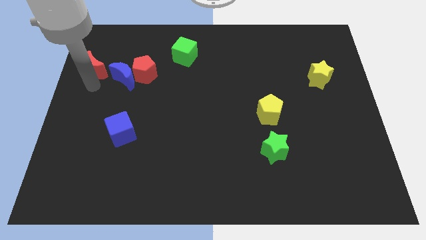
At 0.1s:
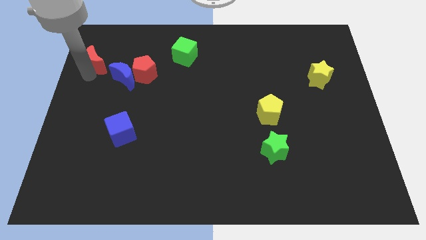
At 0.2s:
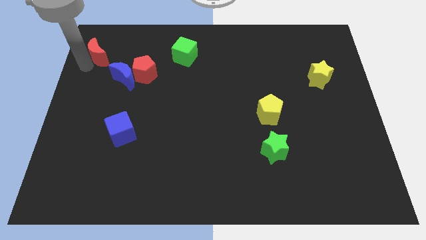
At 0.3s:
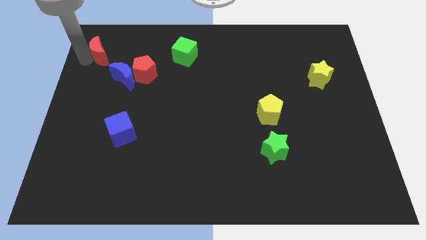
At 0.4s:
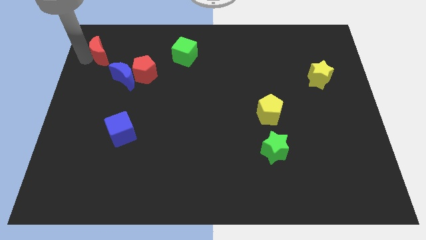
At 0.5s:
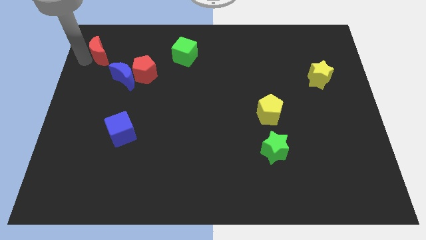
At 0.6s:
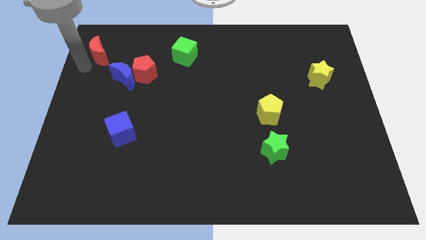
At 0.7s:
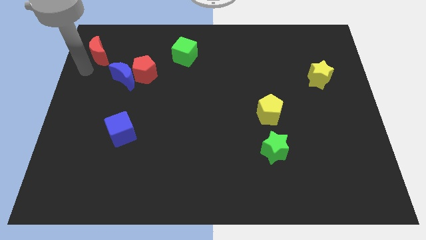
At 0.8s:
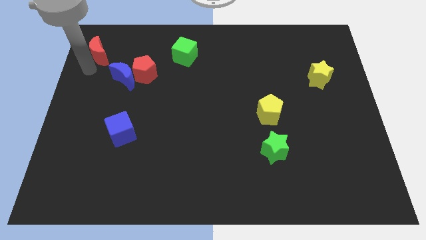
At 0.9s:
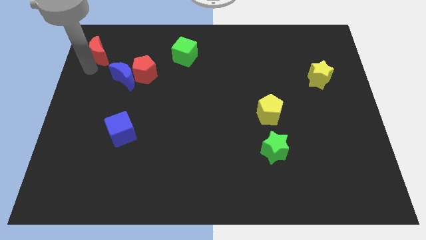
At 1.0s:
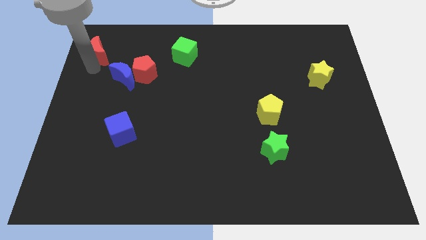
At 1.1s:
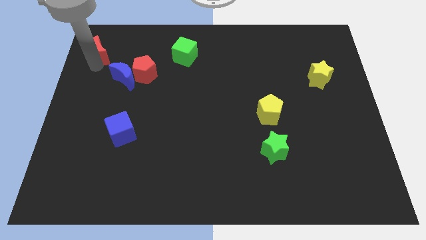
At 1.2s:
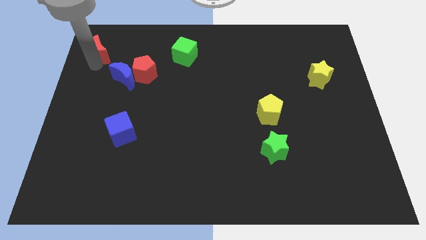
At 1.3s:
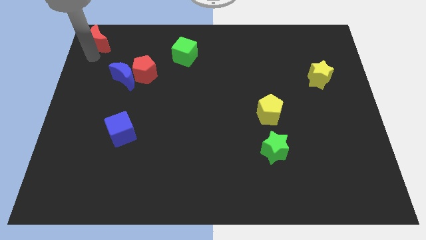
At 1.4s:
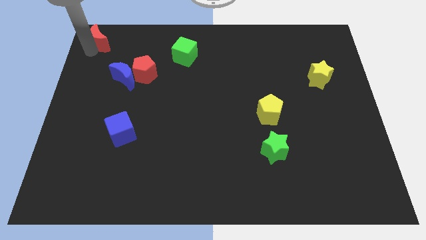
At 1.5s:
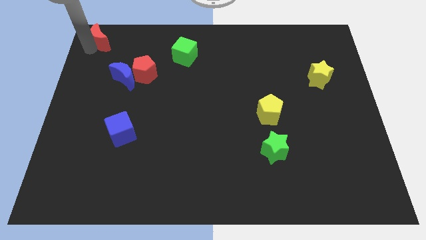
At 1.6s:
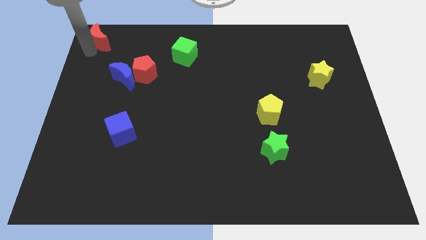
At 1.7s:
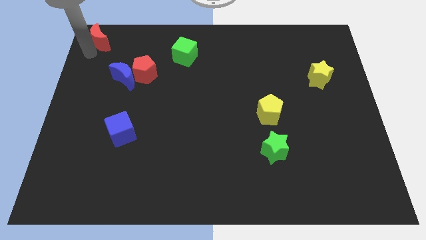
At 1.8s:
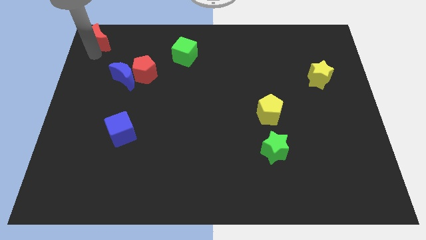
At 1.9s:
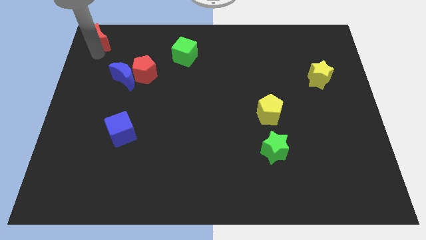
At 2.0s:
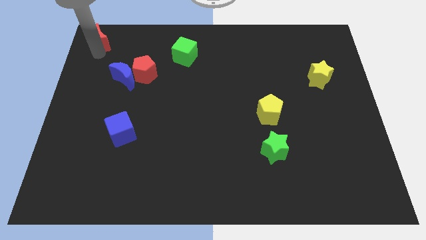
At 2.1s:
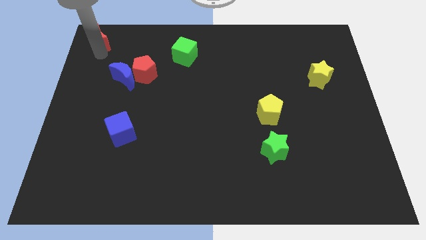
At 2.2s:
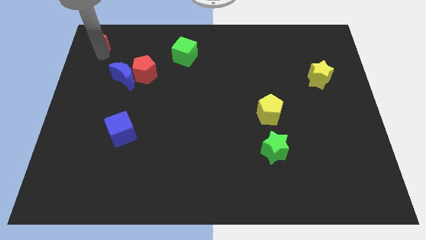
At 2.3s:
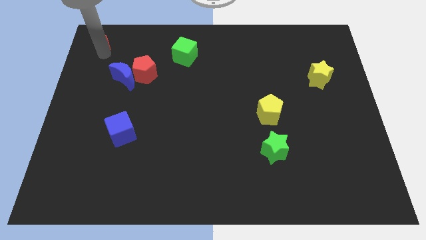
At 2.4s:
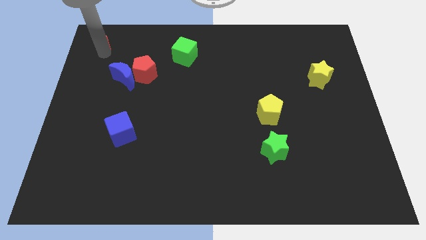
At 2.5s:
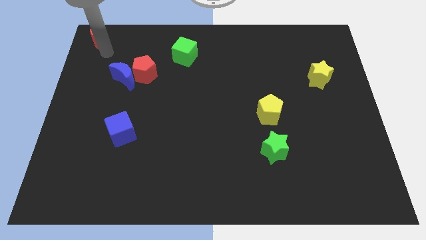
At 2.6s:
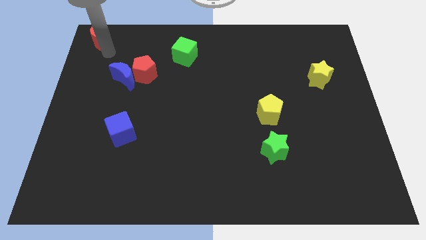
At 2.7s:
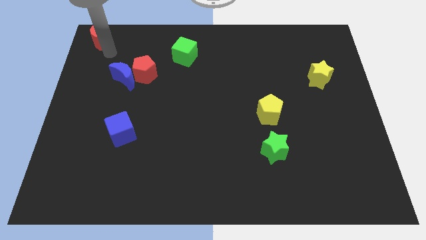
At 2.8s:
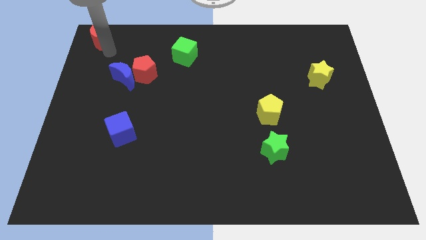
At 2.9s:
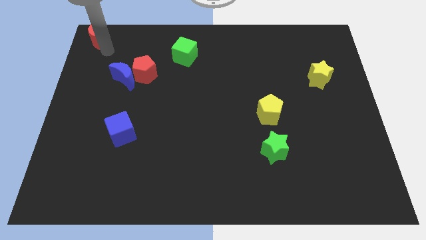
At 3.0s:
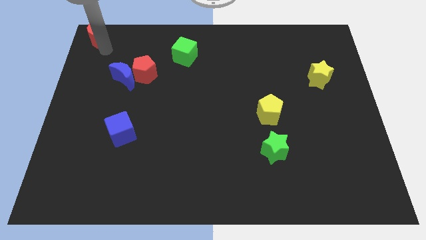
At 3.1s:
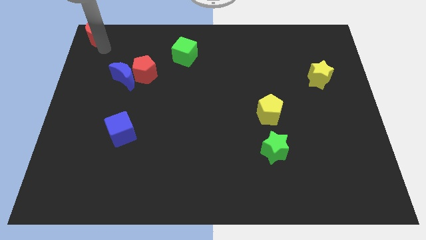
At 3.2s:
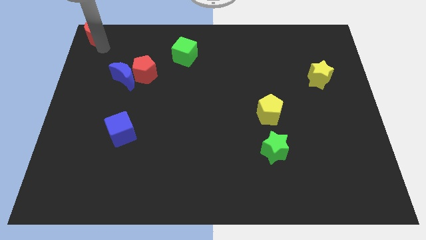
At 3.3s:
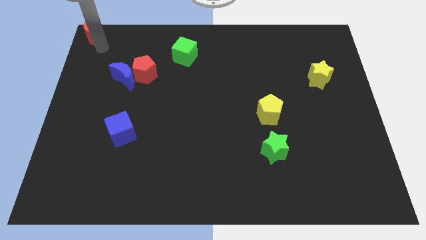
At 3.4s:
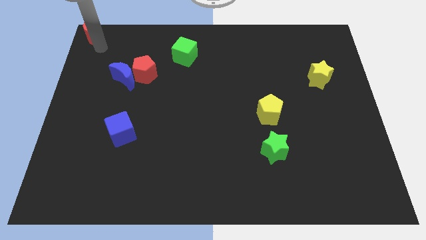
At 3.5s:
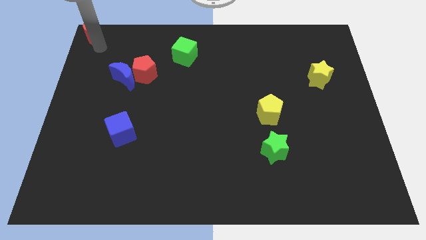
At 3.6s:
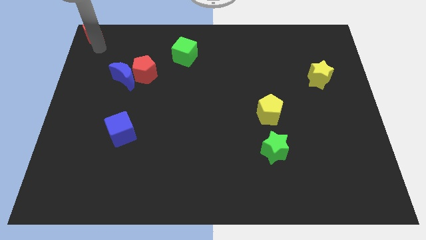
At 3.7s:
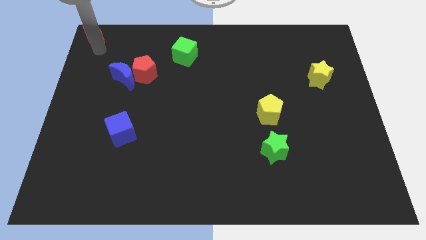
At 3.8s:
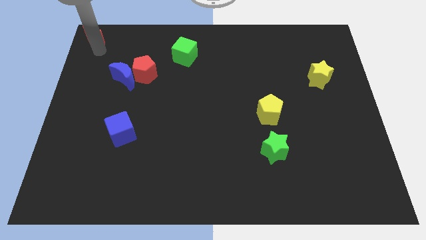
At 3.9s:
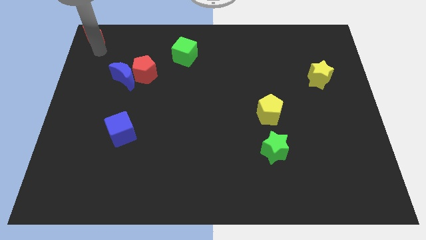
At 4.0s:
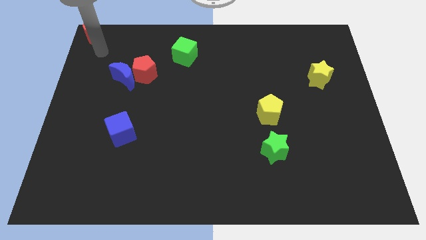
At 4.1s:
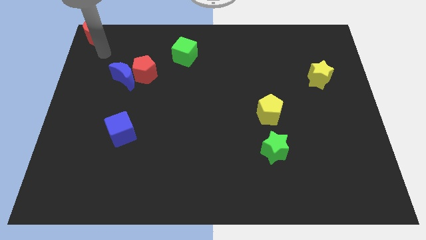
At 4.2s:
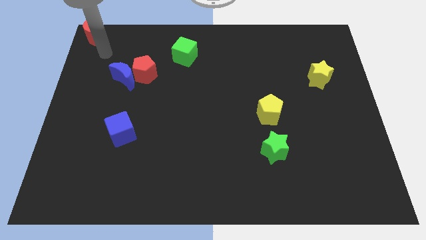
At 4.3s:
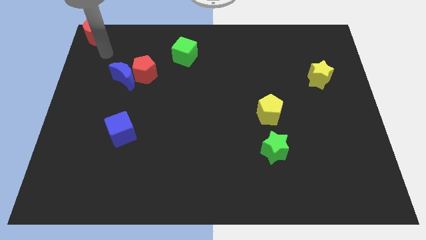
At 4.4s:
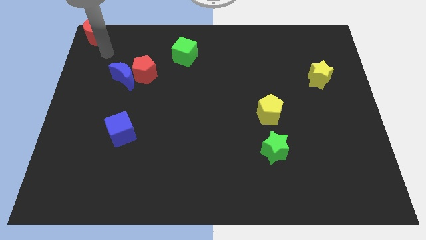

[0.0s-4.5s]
move the red crescent to the top left corner of the board

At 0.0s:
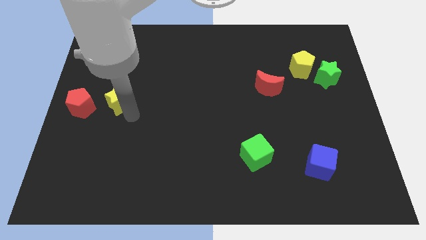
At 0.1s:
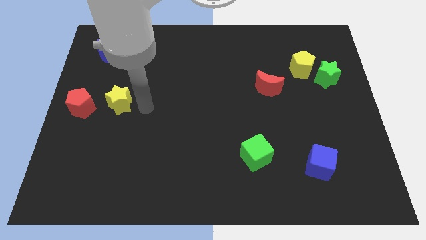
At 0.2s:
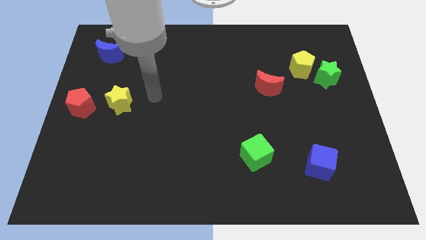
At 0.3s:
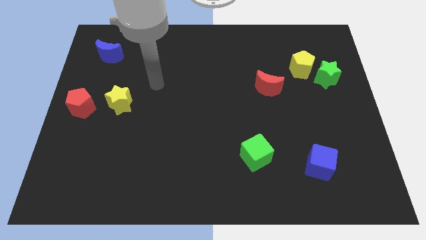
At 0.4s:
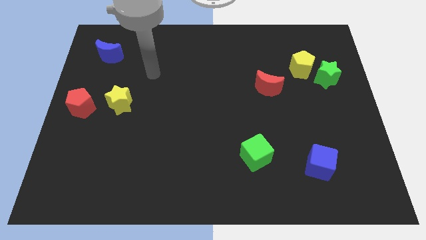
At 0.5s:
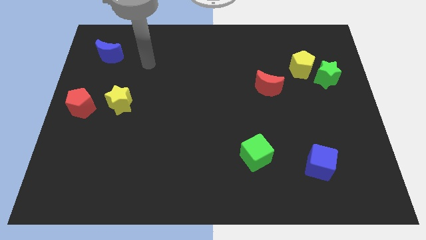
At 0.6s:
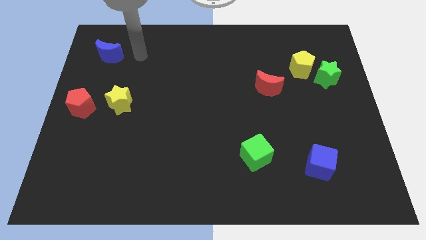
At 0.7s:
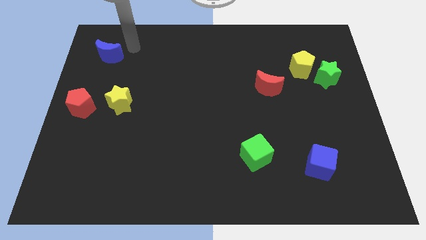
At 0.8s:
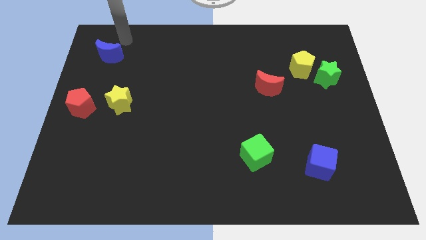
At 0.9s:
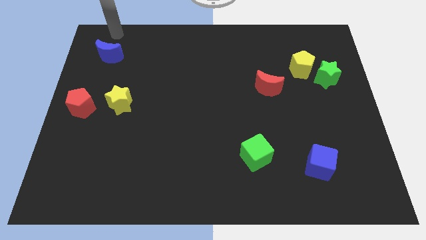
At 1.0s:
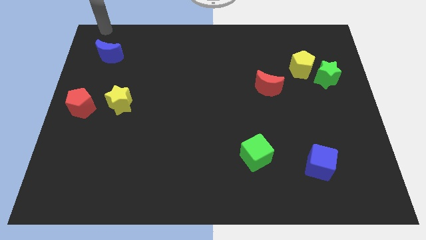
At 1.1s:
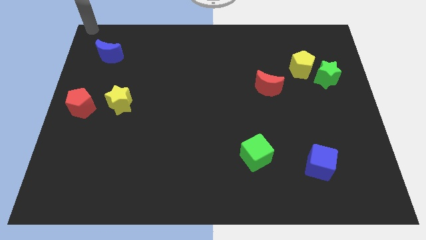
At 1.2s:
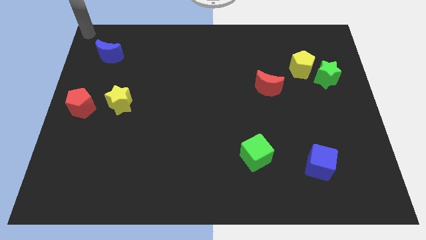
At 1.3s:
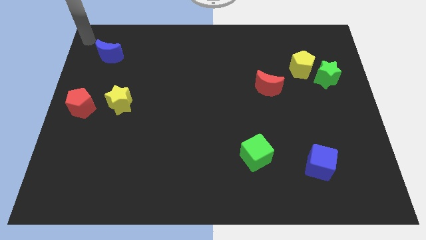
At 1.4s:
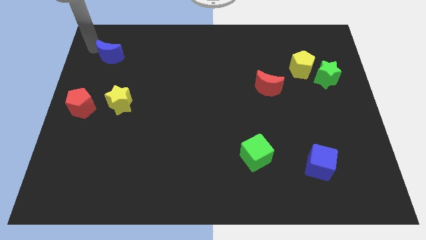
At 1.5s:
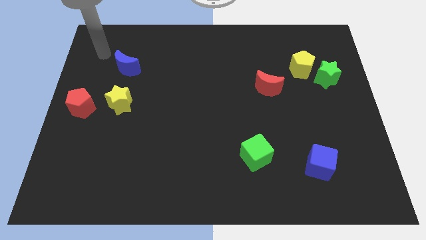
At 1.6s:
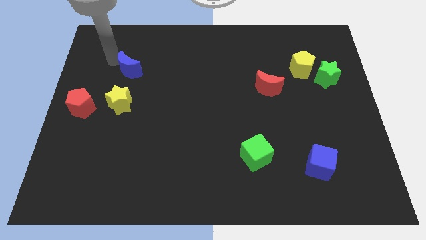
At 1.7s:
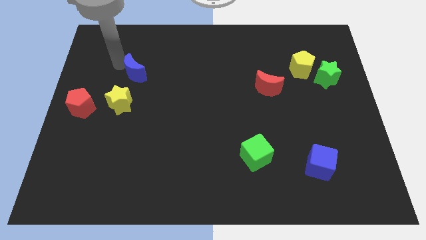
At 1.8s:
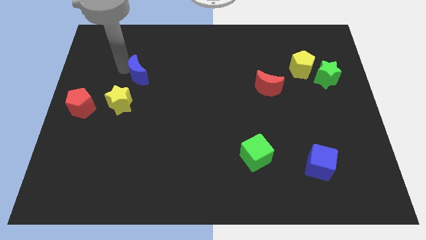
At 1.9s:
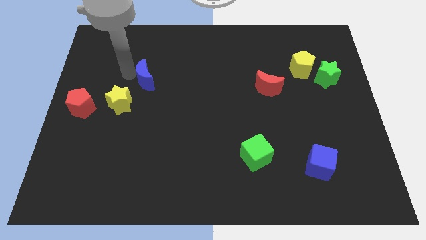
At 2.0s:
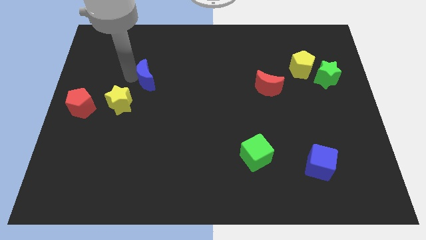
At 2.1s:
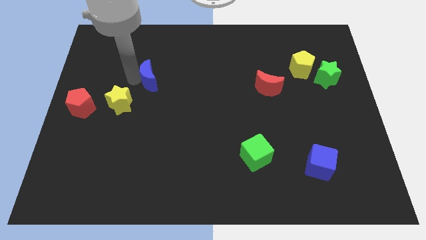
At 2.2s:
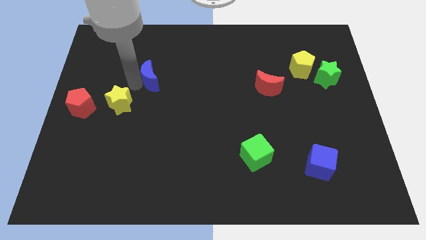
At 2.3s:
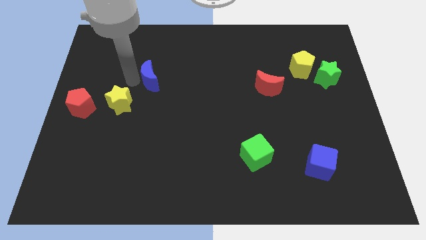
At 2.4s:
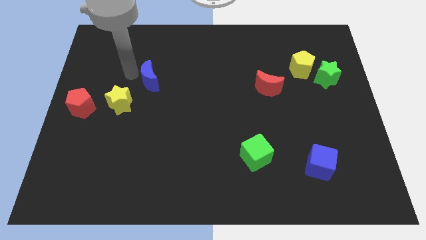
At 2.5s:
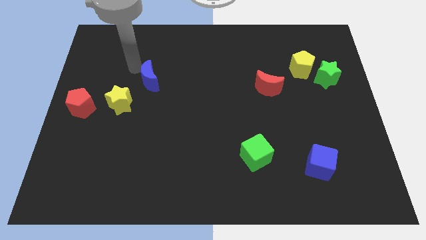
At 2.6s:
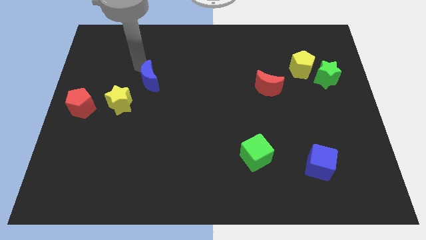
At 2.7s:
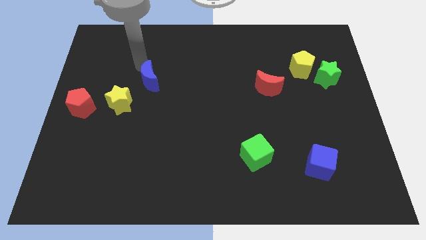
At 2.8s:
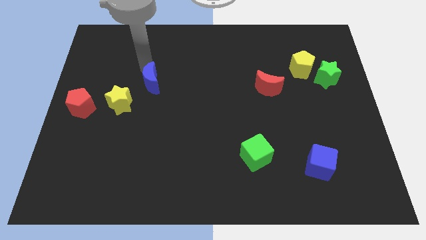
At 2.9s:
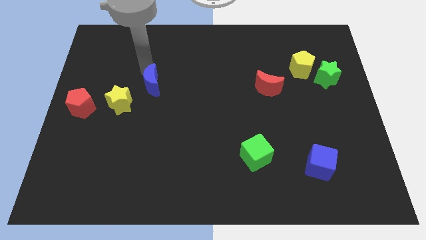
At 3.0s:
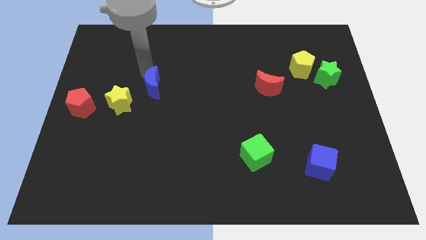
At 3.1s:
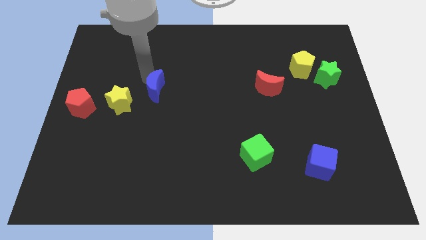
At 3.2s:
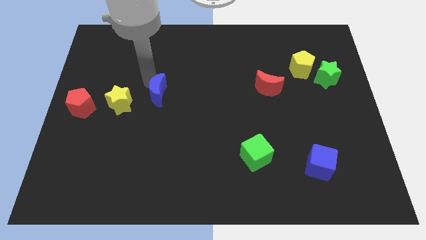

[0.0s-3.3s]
push the blue cube slightly downwards

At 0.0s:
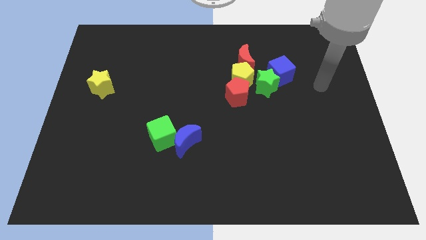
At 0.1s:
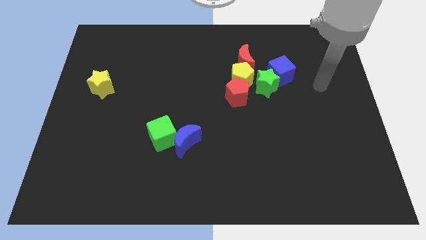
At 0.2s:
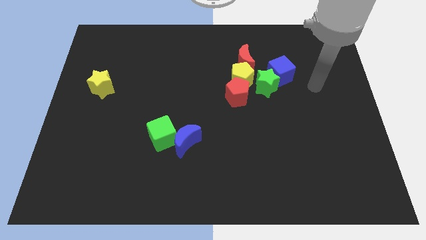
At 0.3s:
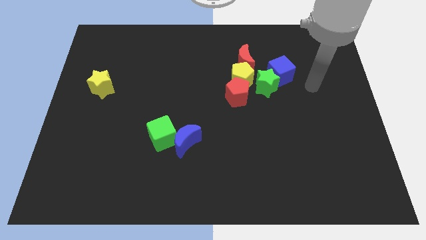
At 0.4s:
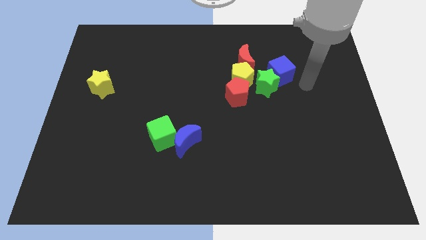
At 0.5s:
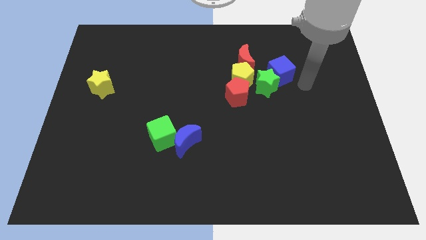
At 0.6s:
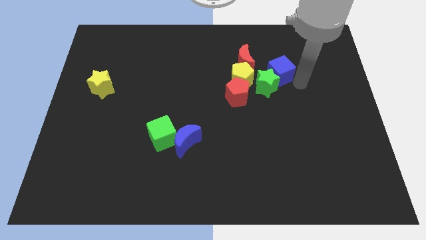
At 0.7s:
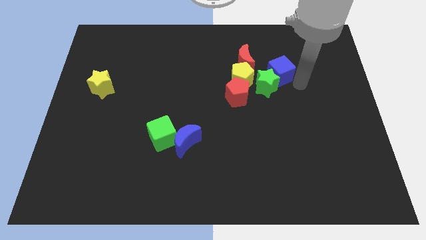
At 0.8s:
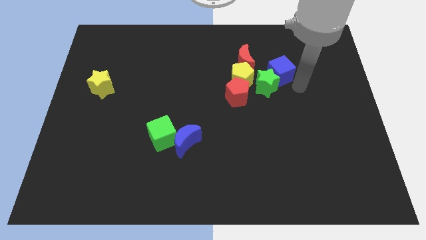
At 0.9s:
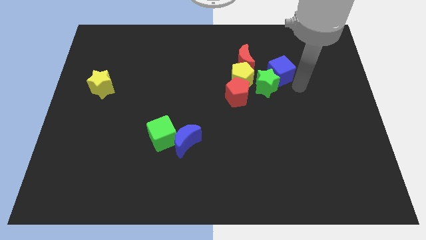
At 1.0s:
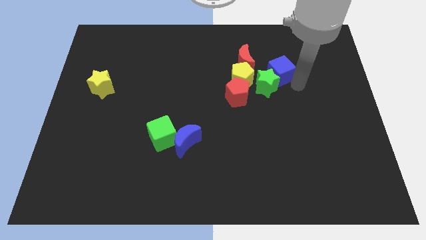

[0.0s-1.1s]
move your arm towards the blue cube

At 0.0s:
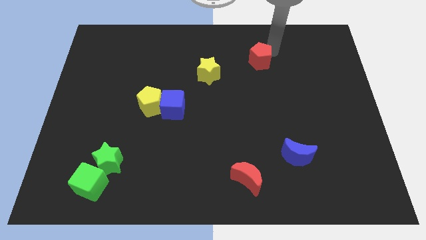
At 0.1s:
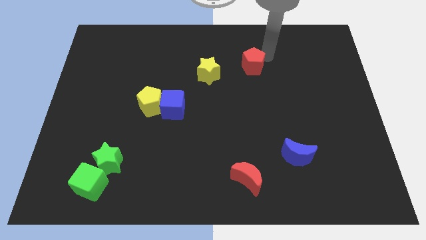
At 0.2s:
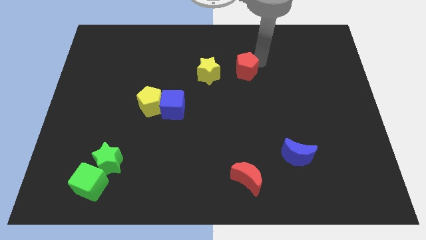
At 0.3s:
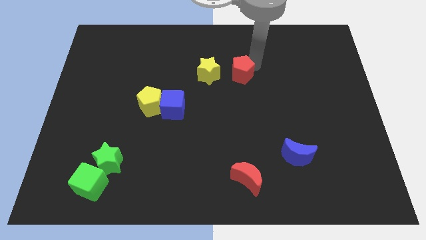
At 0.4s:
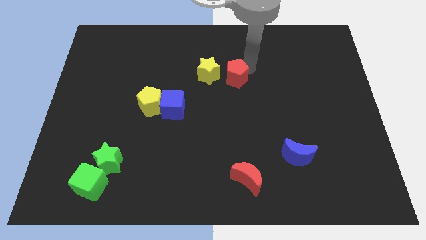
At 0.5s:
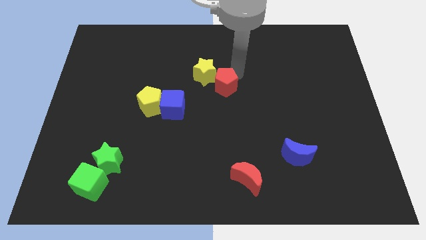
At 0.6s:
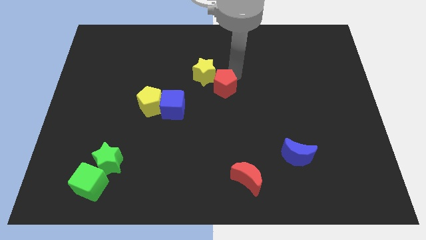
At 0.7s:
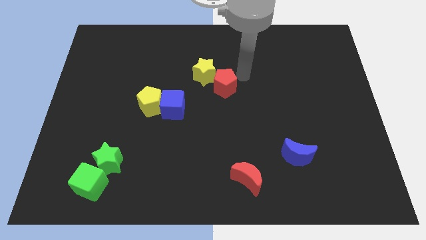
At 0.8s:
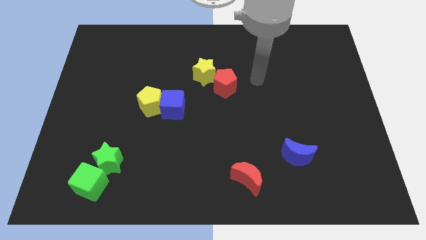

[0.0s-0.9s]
push the red pentagon into the yellow star
